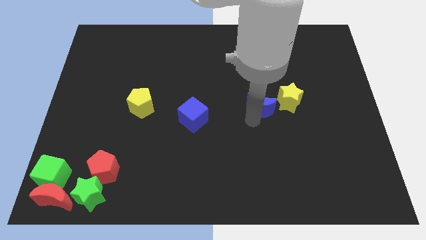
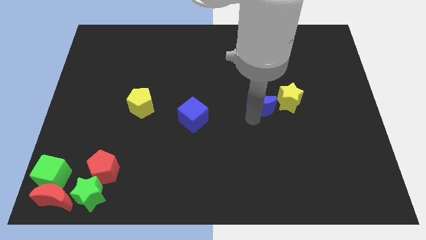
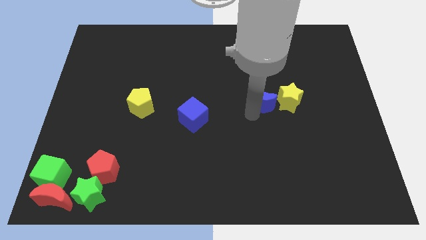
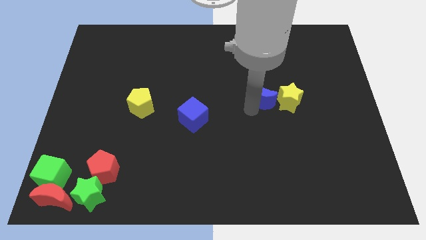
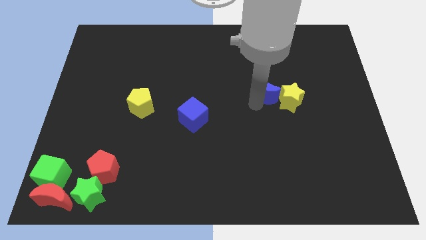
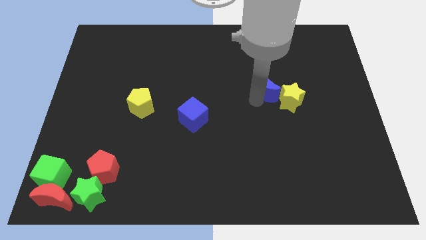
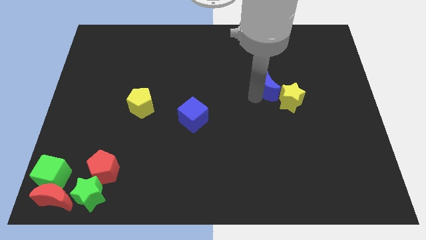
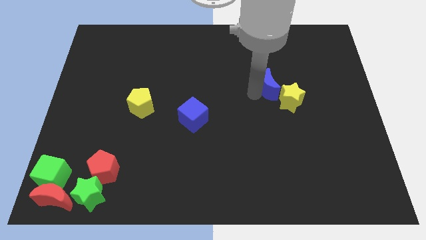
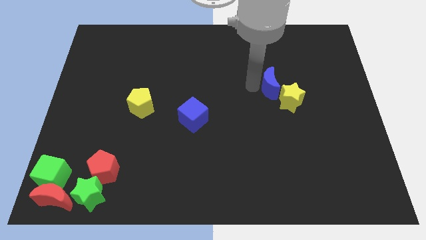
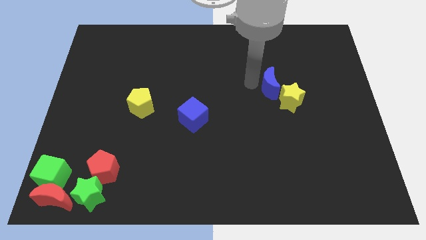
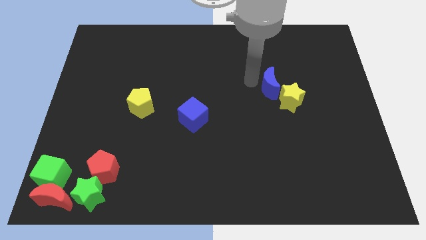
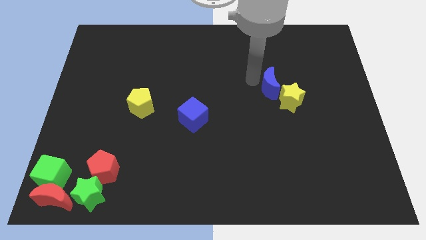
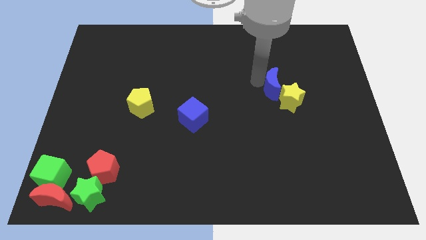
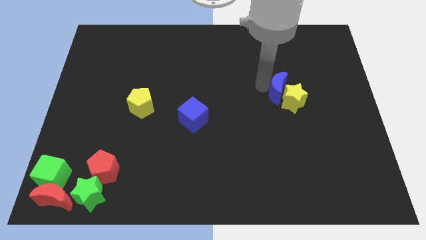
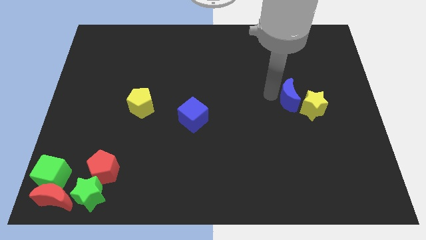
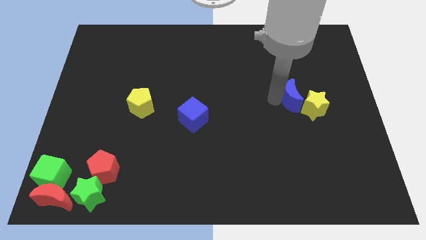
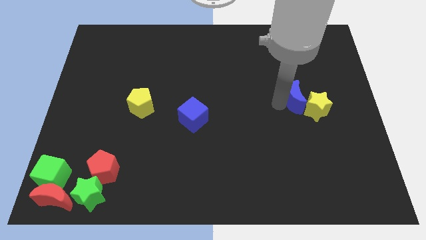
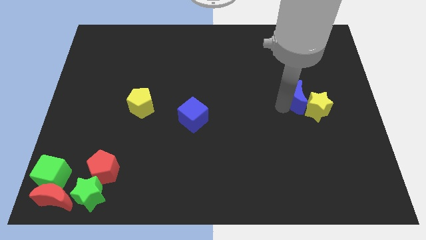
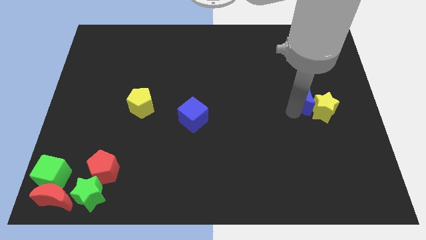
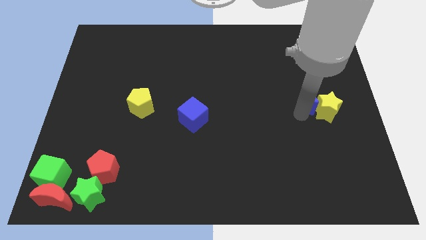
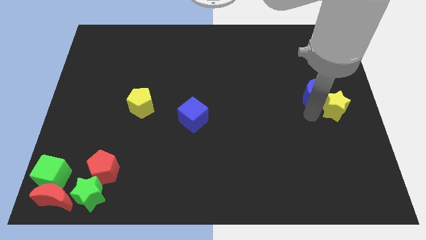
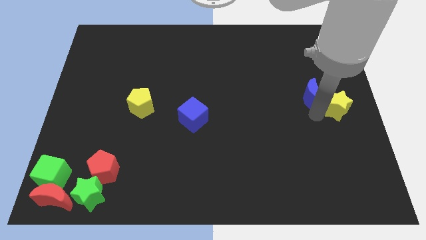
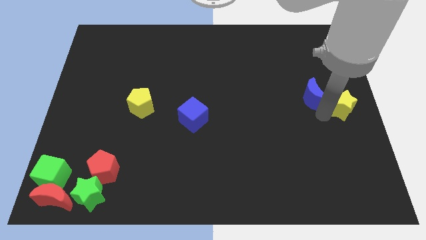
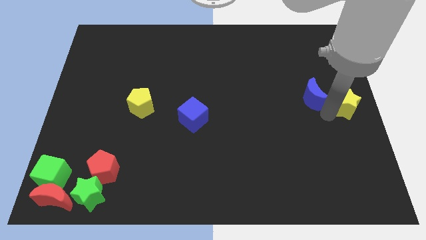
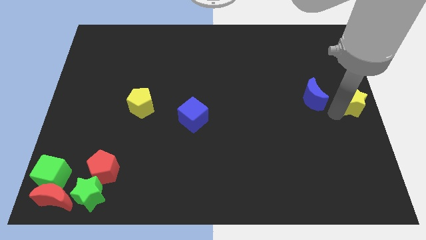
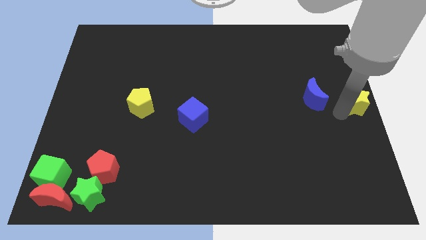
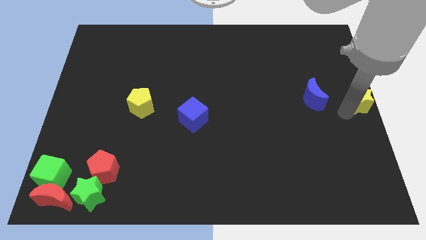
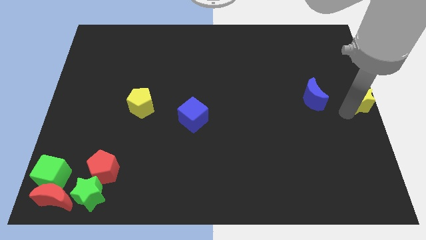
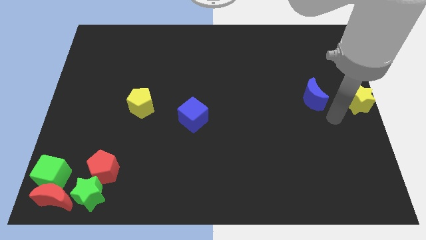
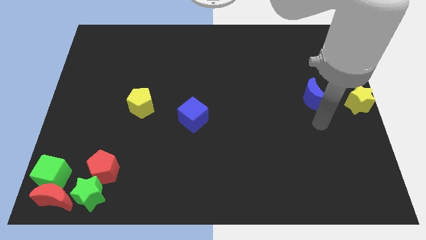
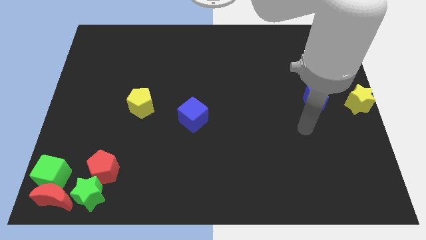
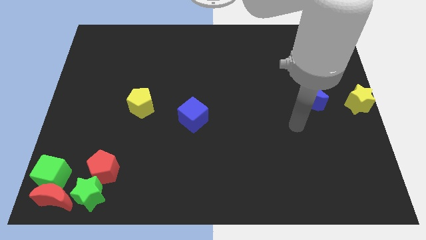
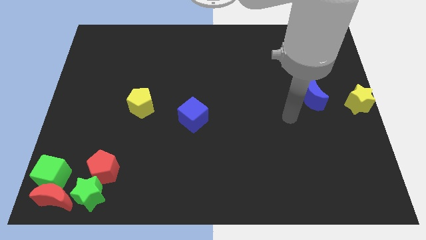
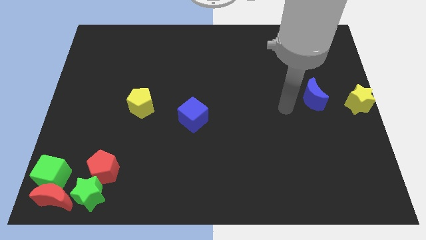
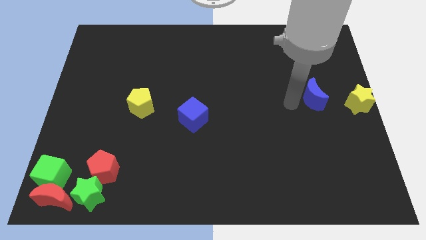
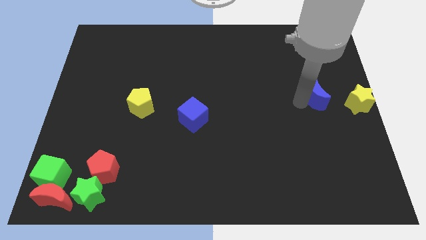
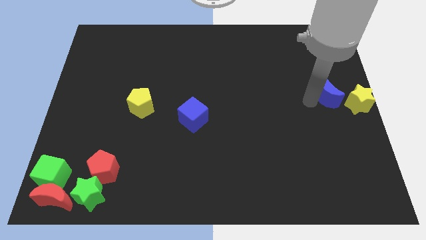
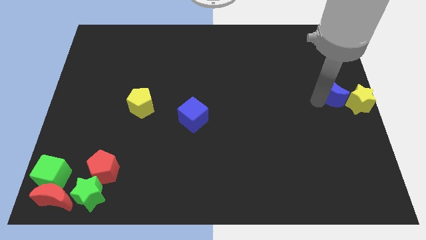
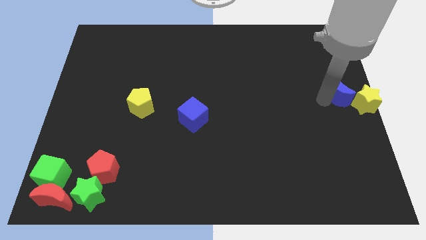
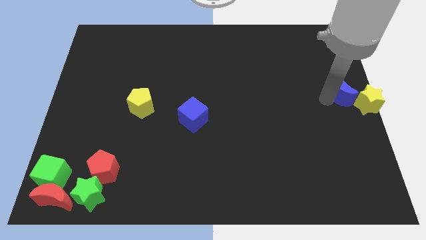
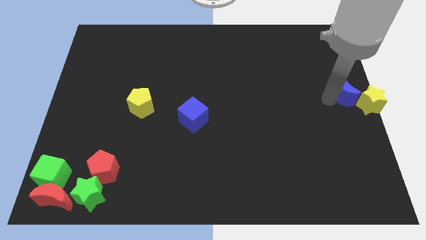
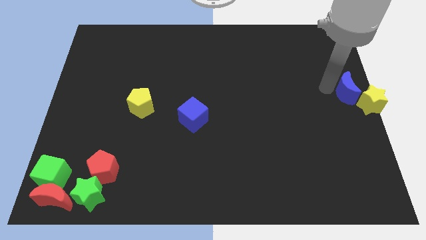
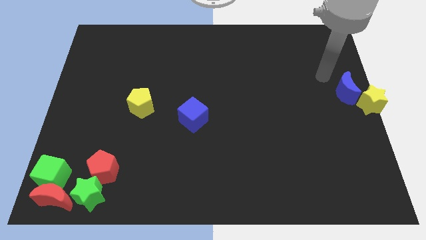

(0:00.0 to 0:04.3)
place the blue crescent and yellow star at the center right side of the board

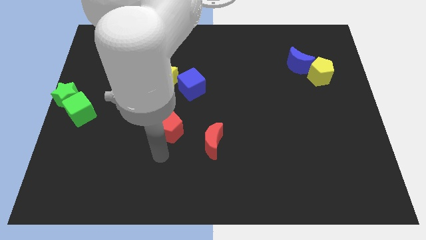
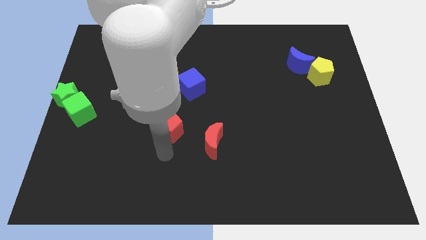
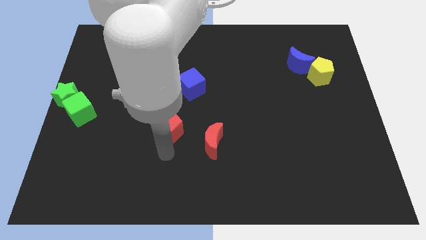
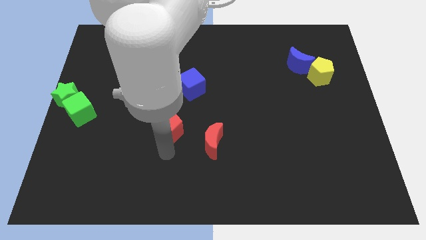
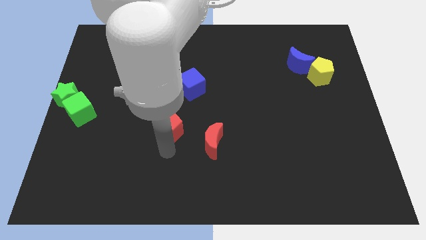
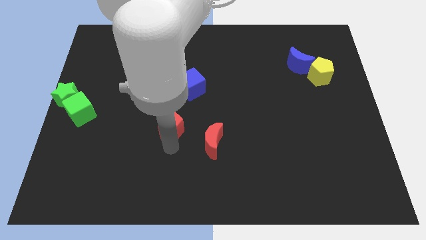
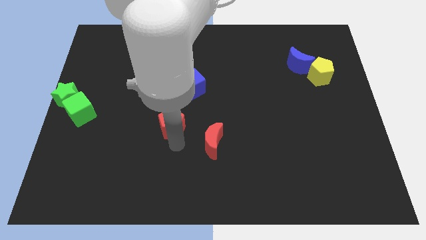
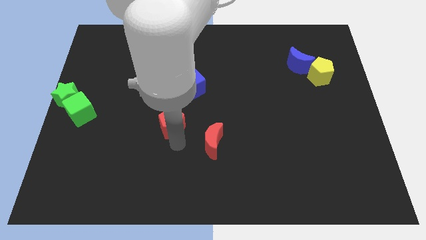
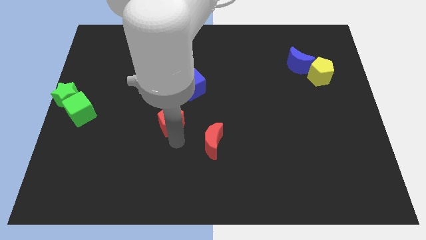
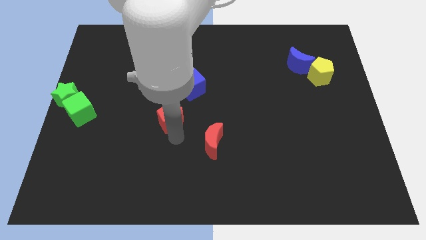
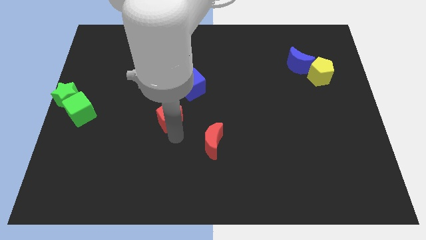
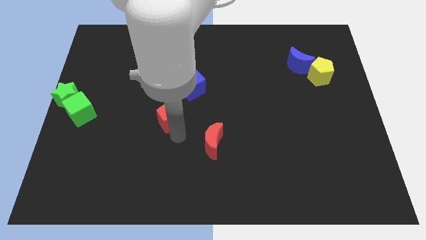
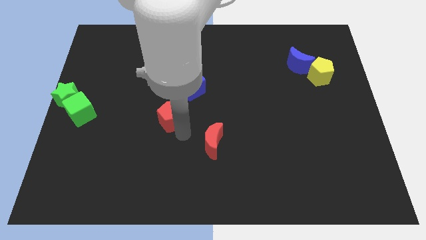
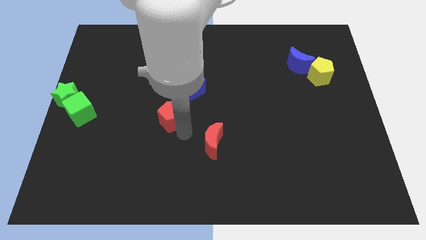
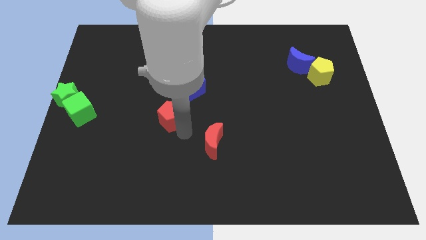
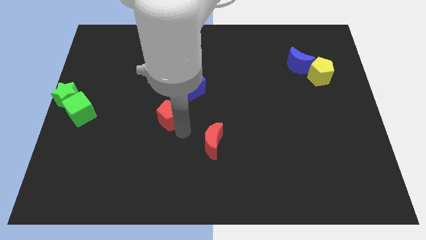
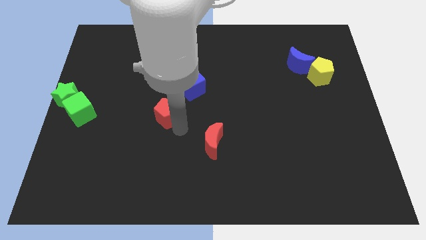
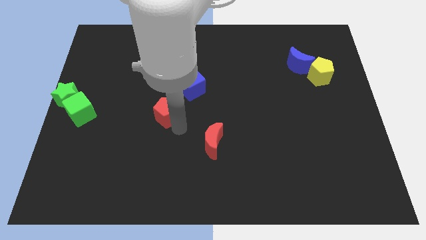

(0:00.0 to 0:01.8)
place red pentagon below the yellow star

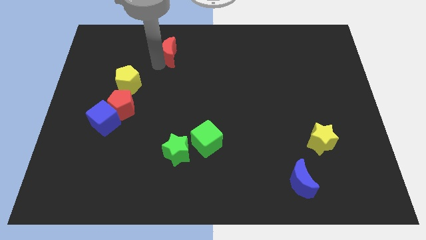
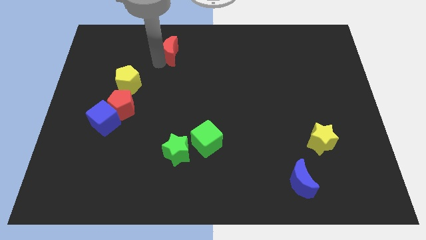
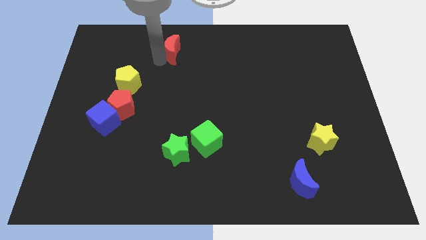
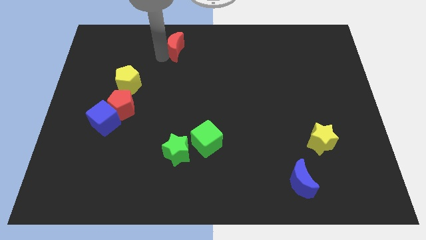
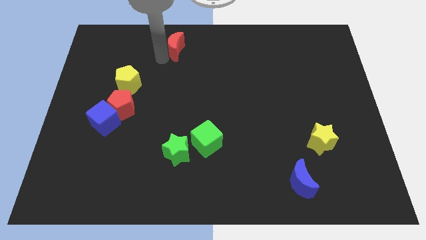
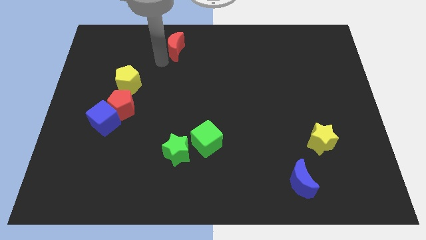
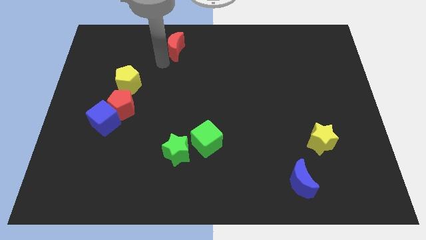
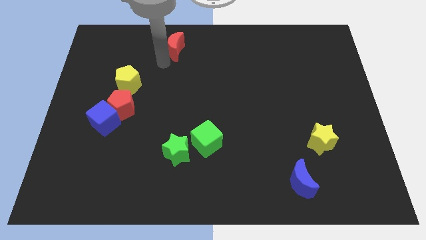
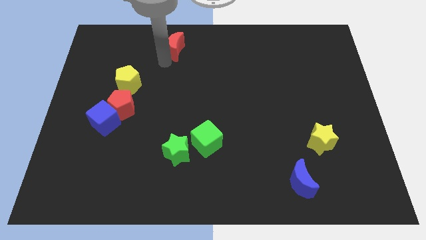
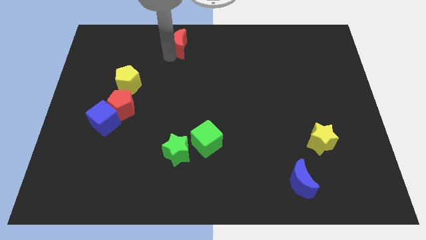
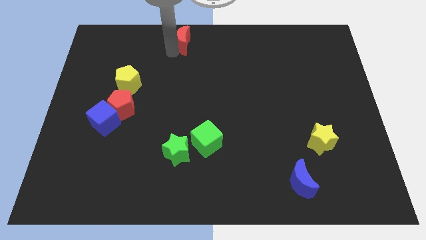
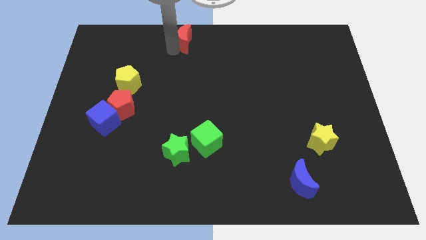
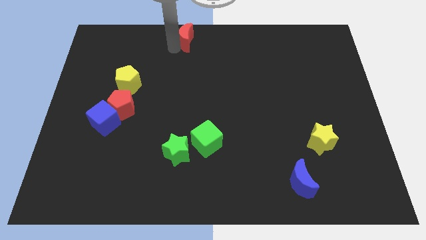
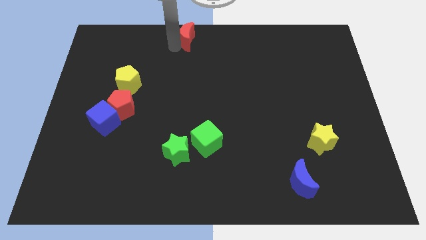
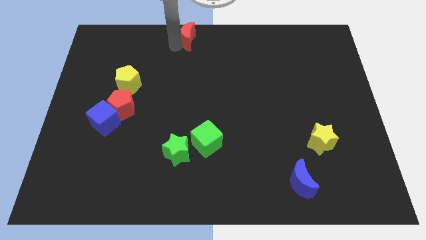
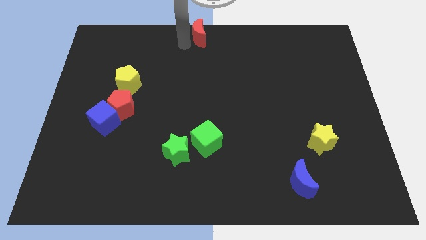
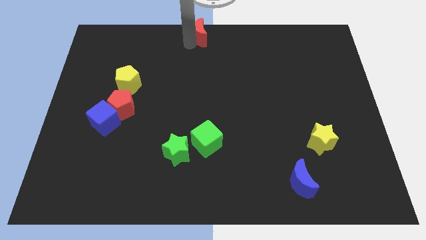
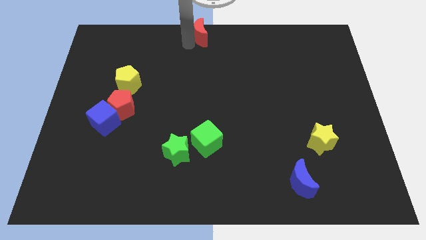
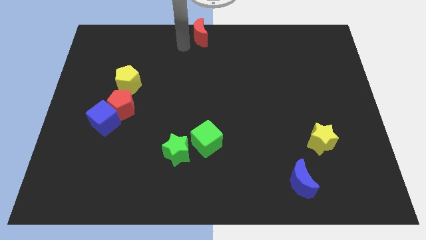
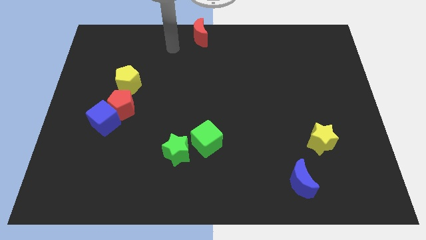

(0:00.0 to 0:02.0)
move red crescent to the top centre of the board

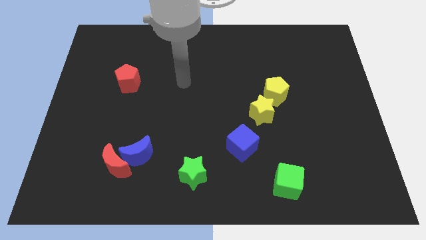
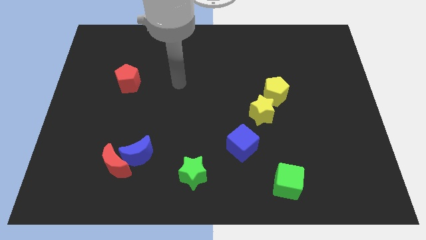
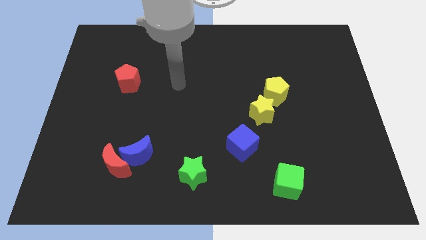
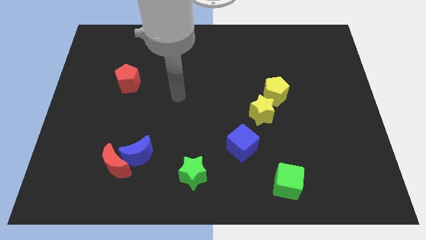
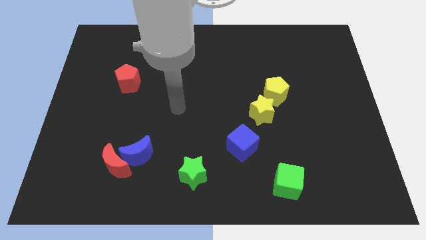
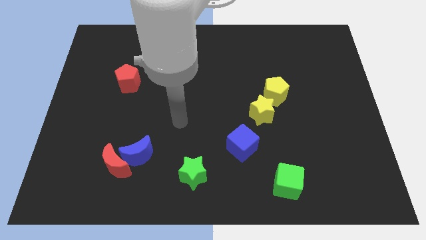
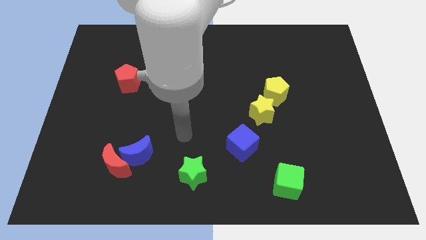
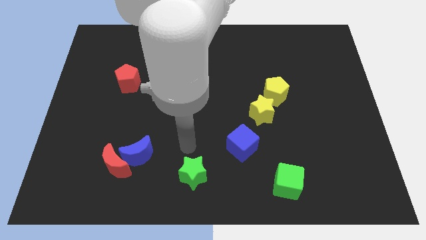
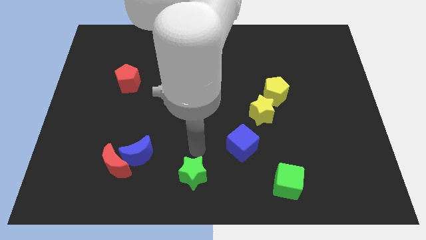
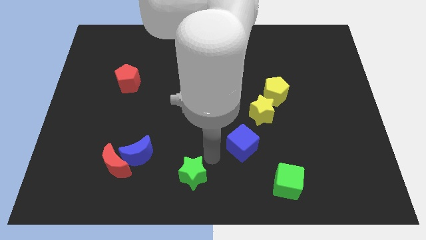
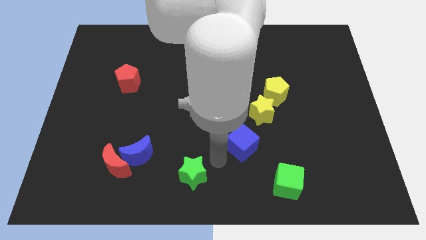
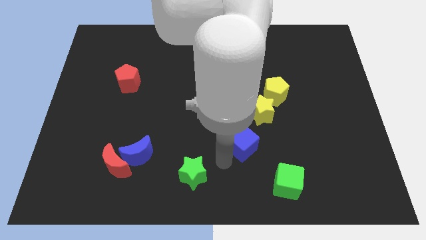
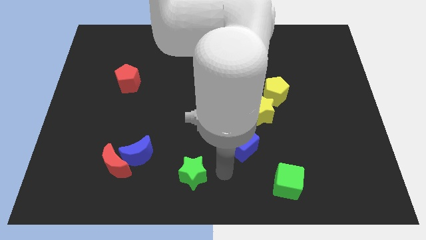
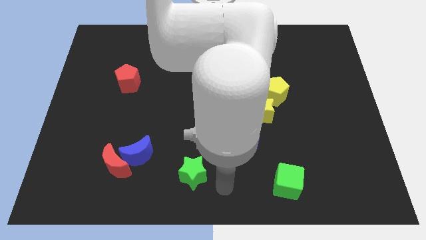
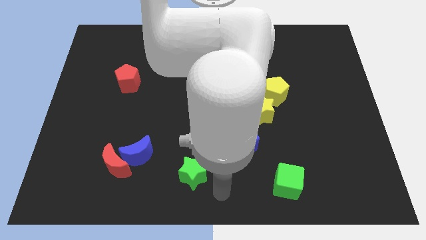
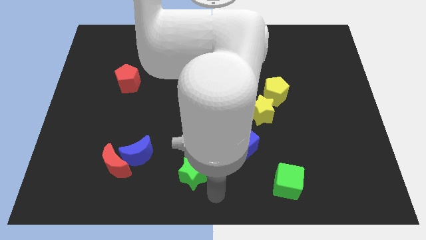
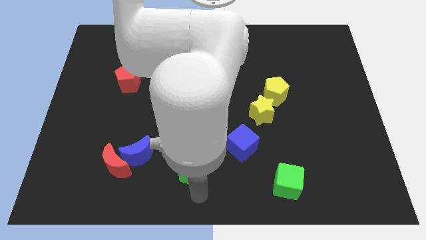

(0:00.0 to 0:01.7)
point your arm below the green star
